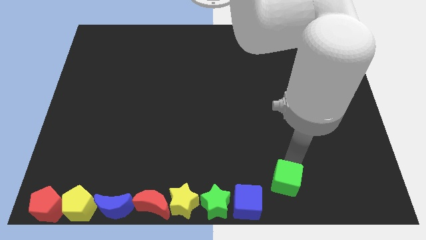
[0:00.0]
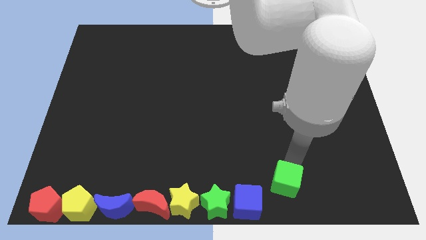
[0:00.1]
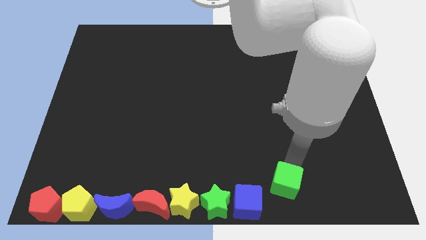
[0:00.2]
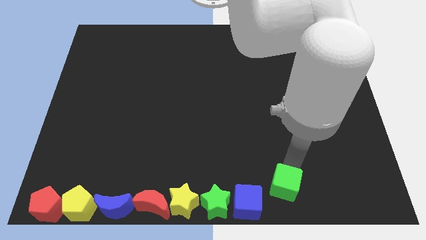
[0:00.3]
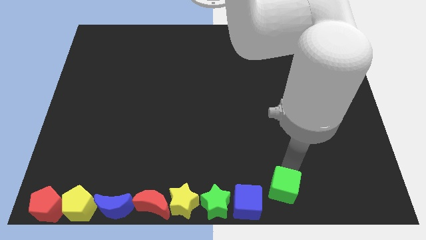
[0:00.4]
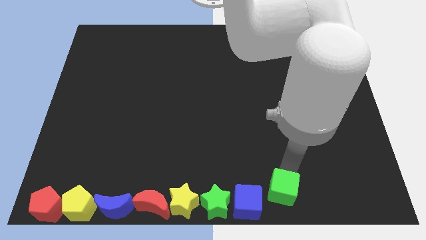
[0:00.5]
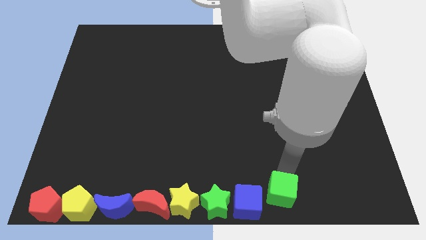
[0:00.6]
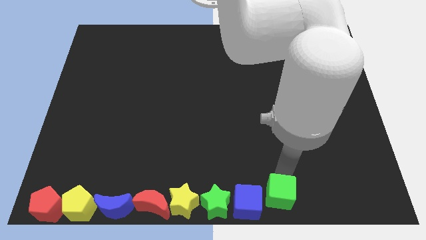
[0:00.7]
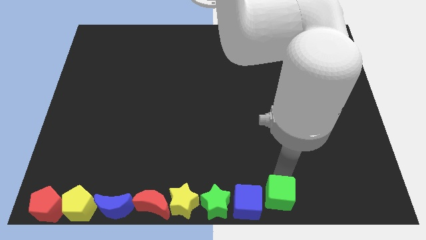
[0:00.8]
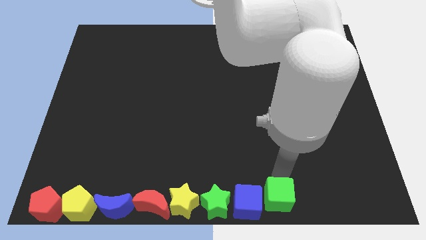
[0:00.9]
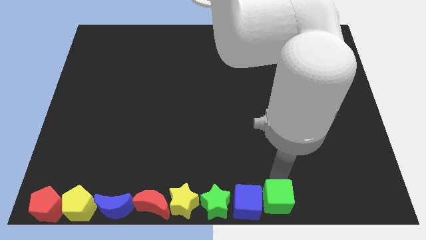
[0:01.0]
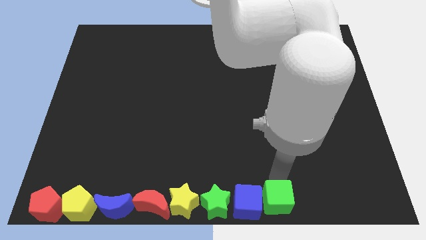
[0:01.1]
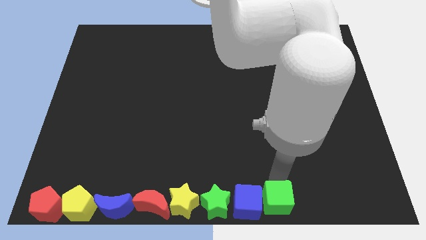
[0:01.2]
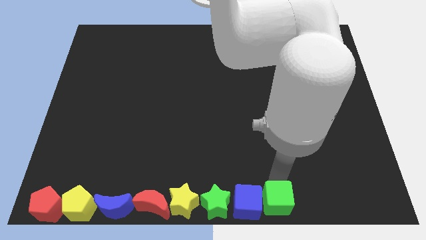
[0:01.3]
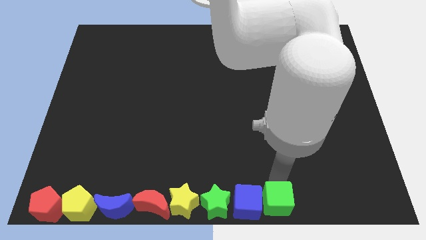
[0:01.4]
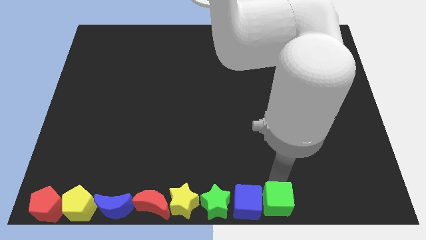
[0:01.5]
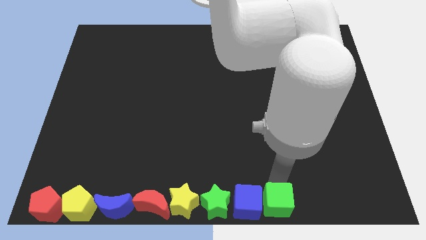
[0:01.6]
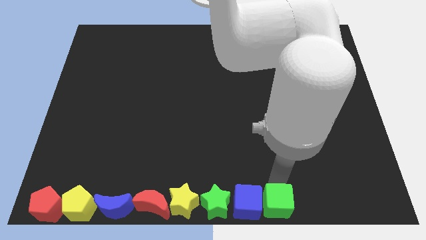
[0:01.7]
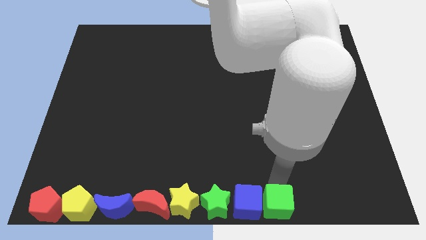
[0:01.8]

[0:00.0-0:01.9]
move the green cube right beside the blue cube

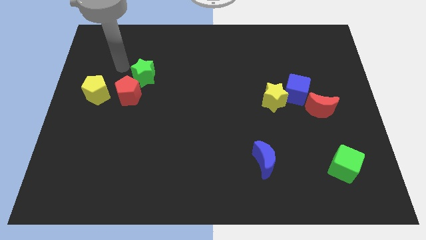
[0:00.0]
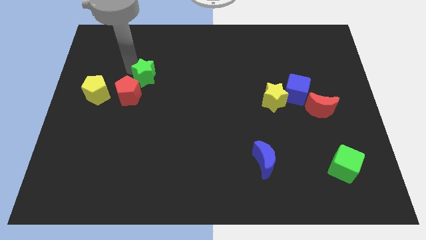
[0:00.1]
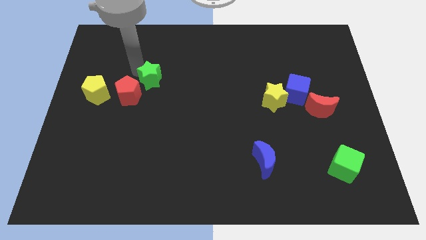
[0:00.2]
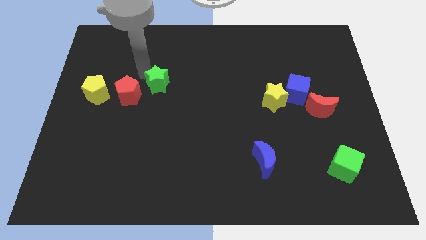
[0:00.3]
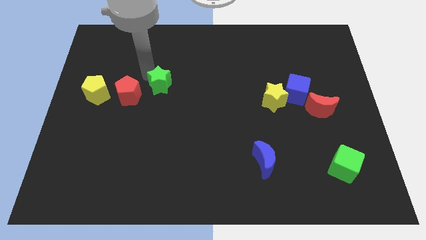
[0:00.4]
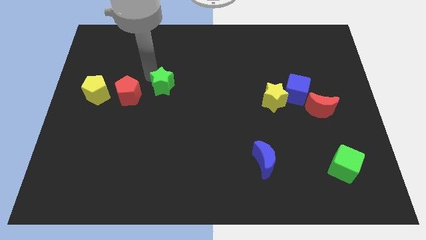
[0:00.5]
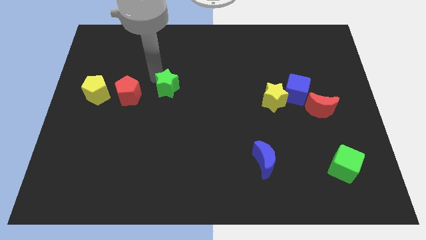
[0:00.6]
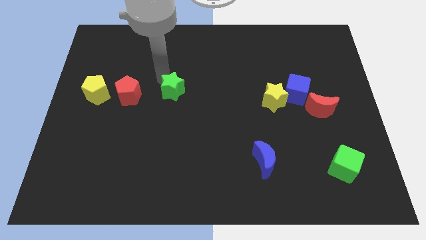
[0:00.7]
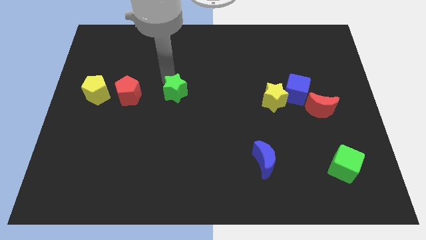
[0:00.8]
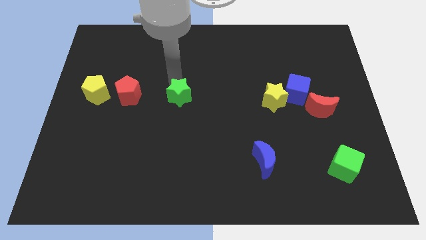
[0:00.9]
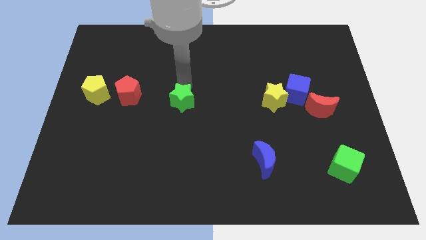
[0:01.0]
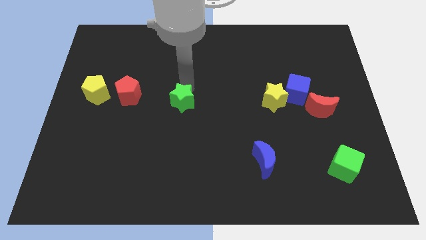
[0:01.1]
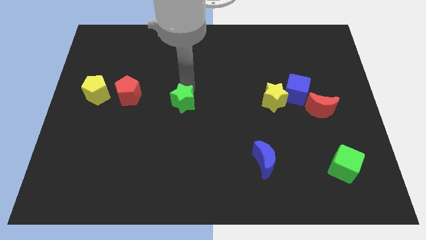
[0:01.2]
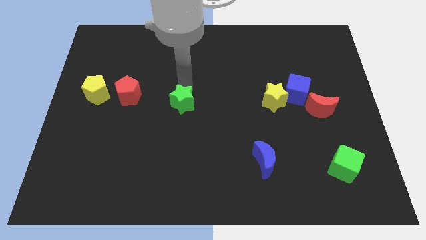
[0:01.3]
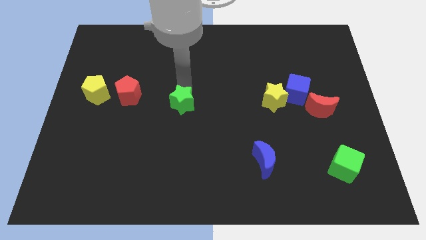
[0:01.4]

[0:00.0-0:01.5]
place the green star right to the red pentagon to form a horizontal line

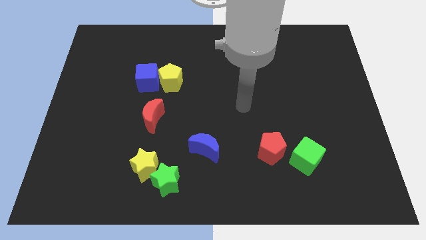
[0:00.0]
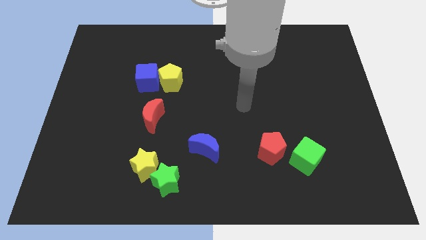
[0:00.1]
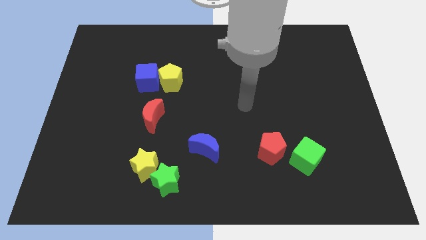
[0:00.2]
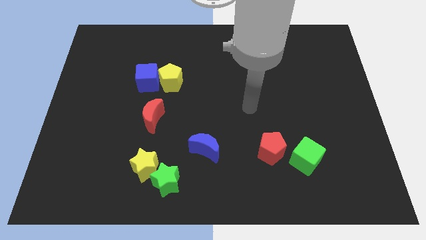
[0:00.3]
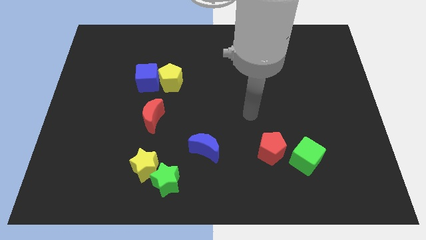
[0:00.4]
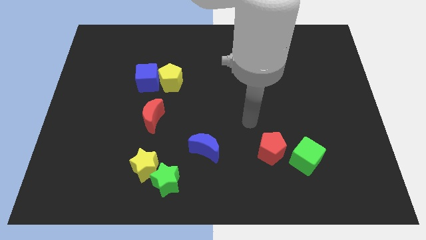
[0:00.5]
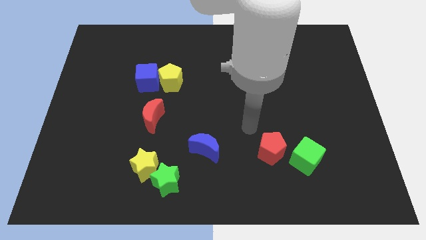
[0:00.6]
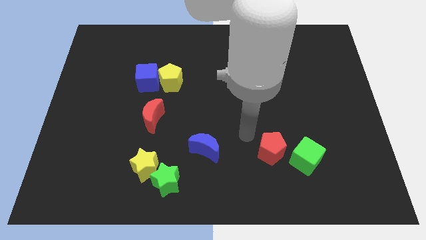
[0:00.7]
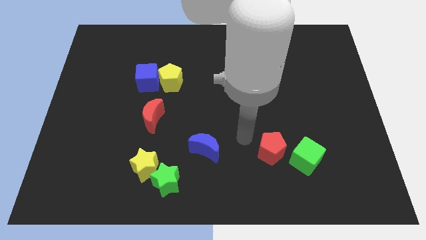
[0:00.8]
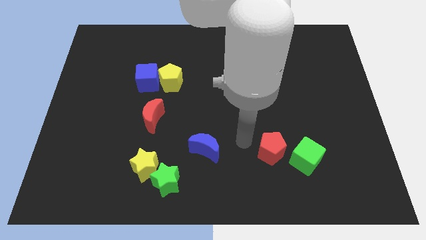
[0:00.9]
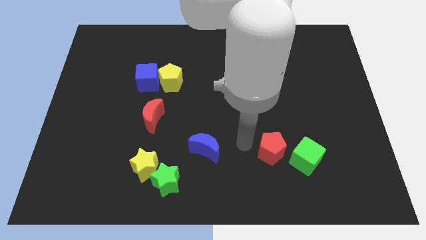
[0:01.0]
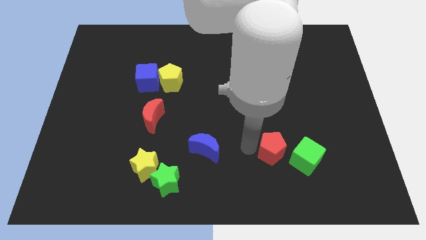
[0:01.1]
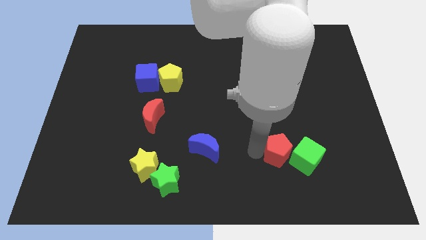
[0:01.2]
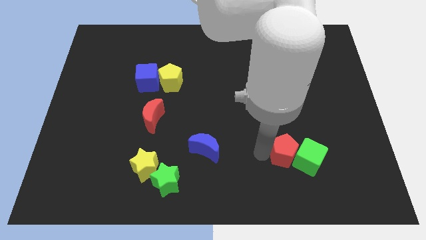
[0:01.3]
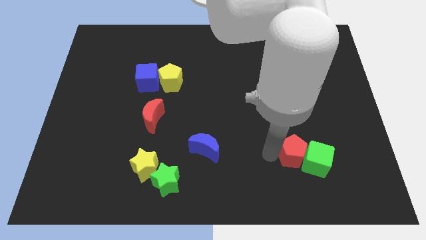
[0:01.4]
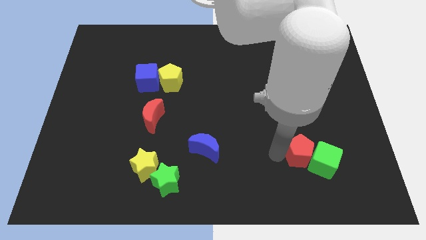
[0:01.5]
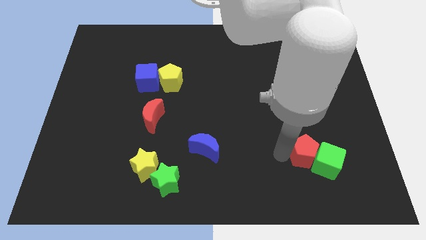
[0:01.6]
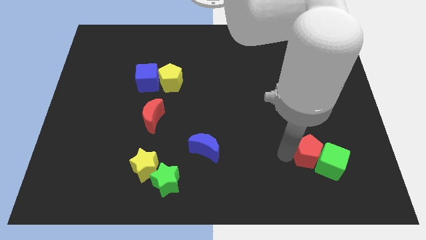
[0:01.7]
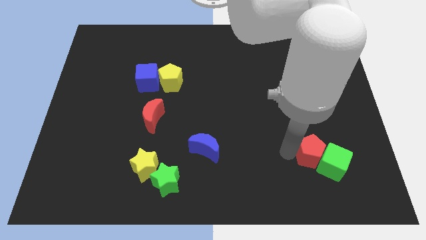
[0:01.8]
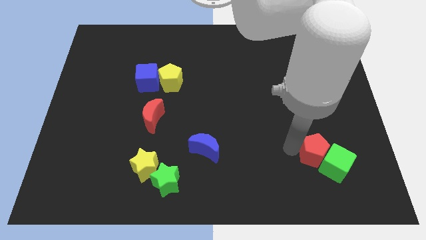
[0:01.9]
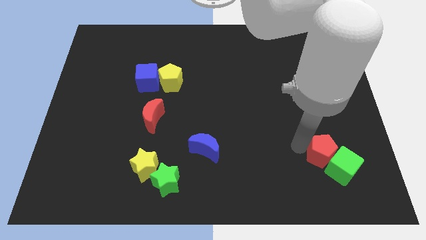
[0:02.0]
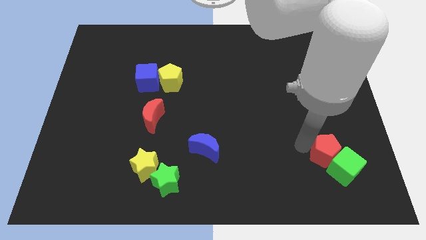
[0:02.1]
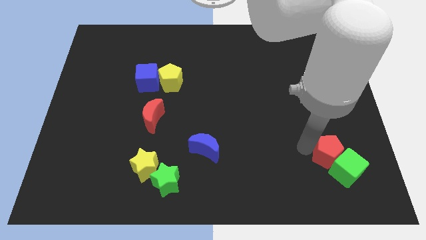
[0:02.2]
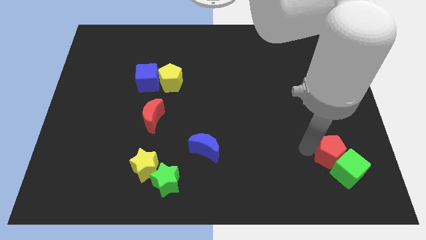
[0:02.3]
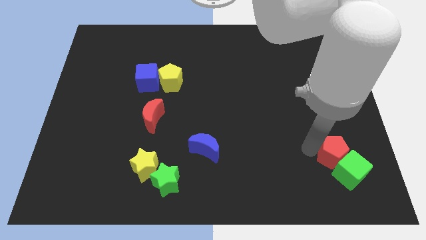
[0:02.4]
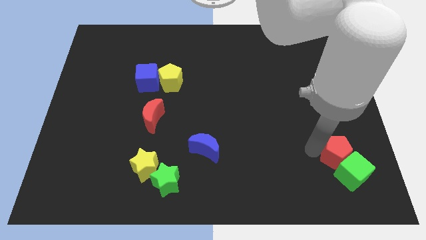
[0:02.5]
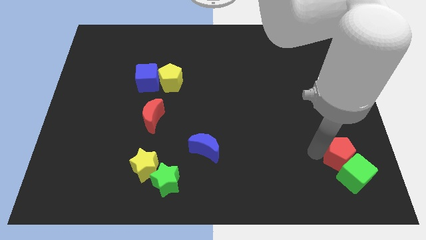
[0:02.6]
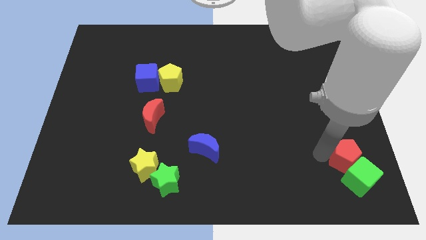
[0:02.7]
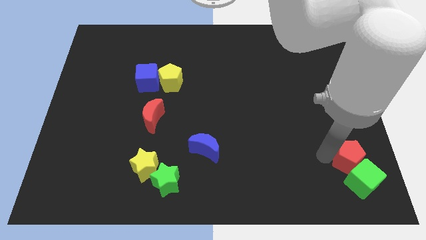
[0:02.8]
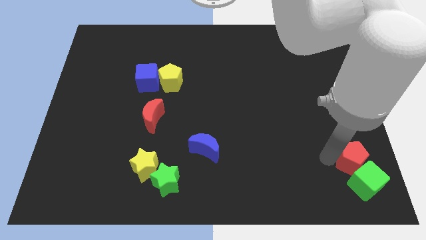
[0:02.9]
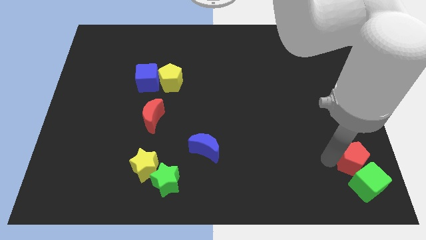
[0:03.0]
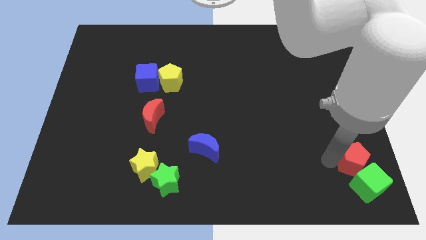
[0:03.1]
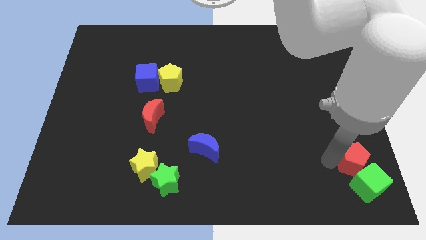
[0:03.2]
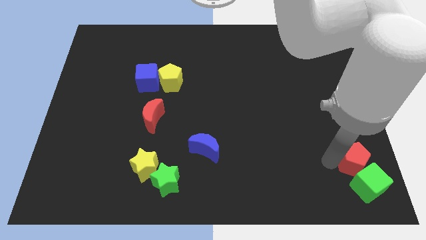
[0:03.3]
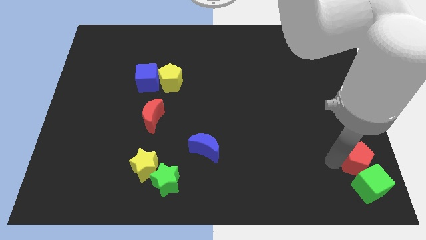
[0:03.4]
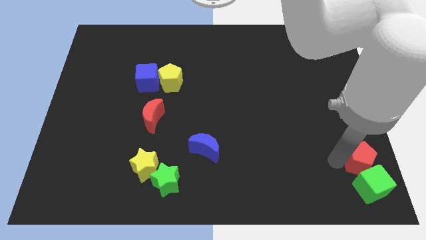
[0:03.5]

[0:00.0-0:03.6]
move red pentagon along with green cube towards the bottom right corner of the board

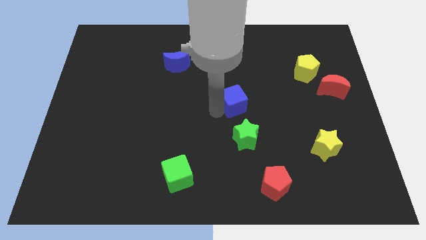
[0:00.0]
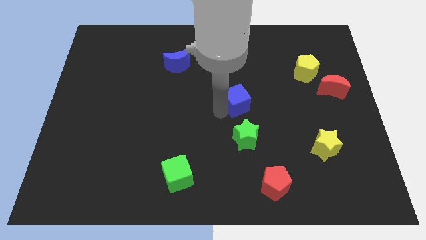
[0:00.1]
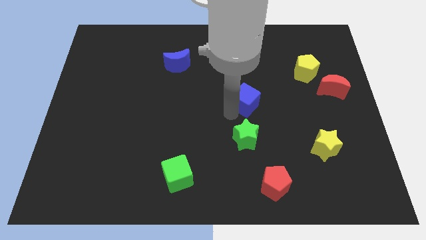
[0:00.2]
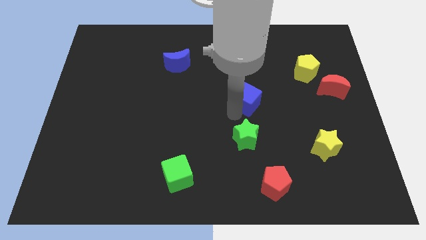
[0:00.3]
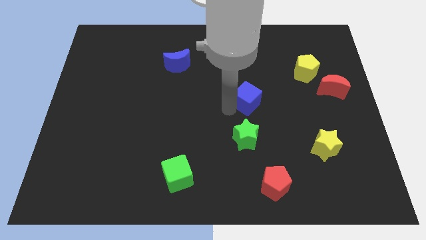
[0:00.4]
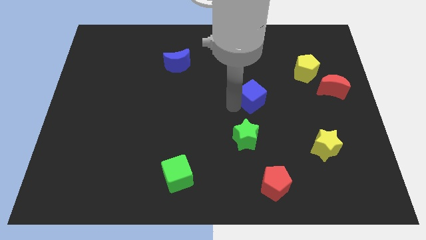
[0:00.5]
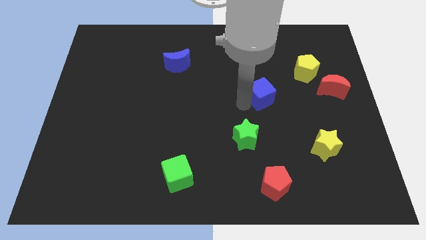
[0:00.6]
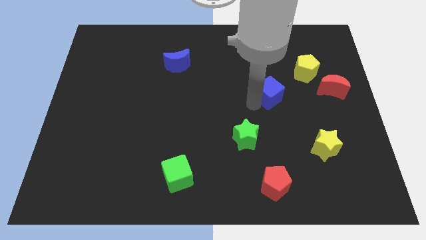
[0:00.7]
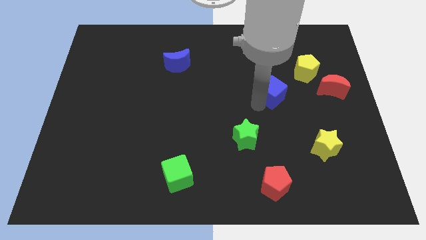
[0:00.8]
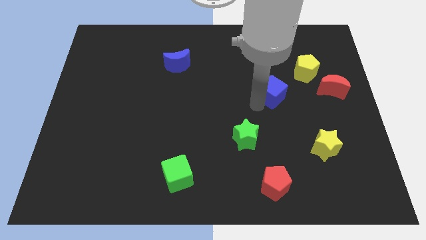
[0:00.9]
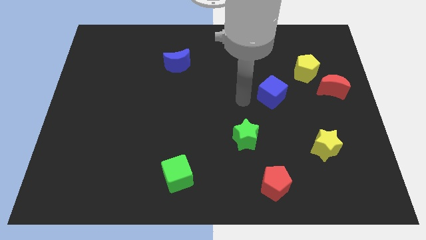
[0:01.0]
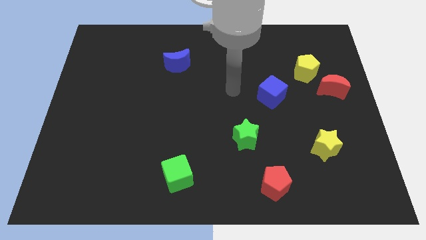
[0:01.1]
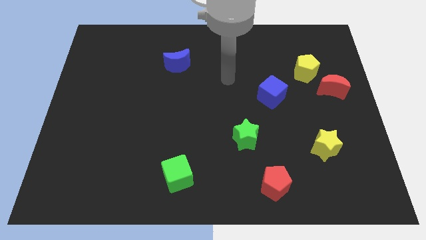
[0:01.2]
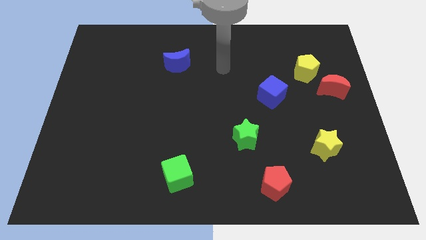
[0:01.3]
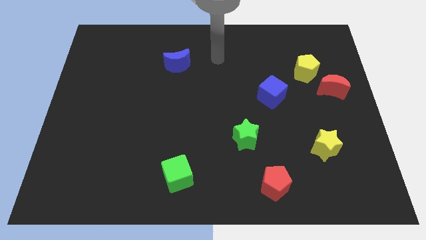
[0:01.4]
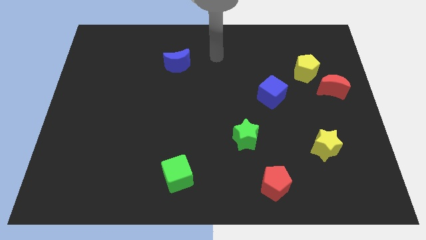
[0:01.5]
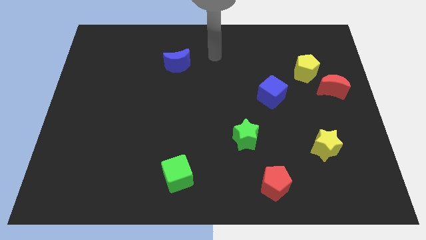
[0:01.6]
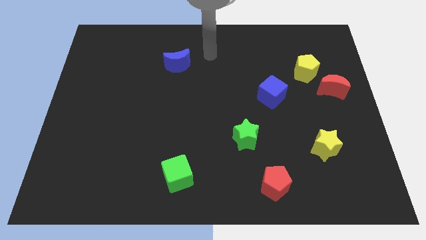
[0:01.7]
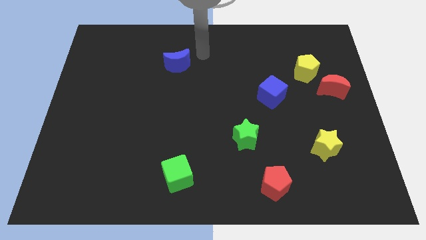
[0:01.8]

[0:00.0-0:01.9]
place the blue cube to the left of the red crescent
